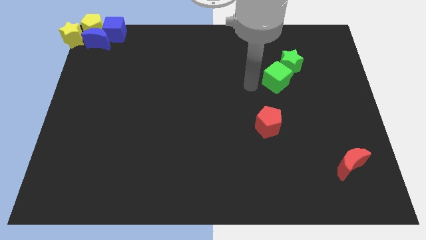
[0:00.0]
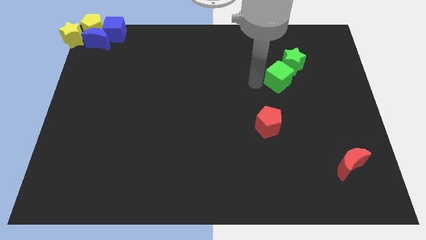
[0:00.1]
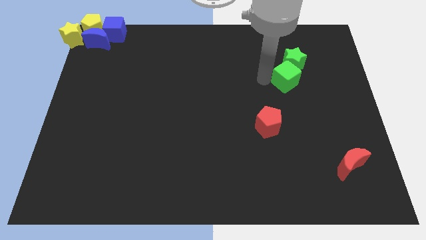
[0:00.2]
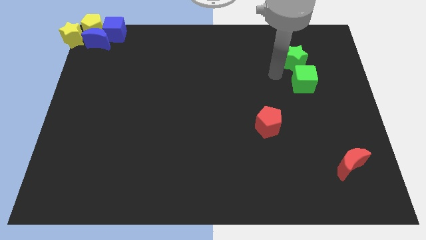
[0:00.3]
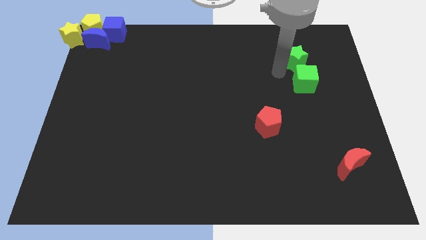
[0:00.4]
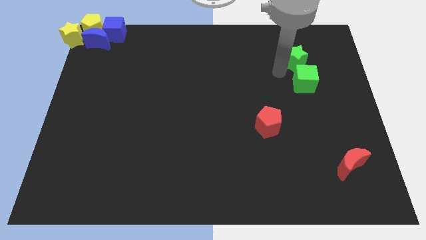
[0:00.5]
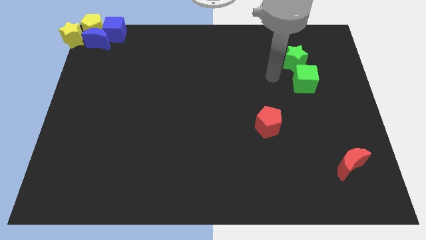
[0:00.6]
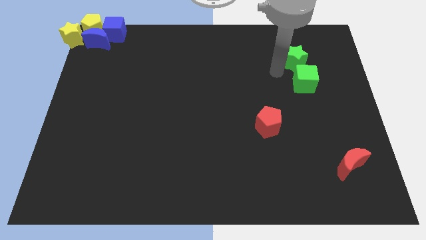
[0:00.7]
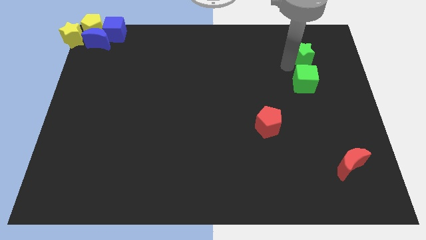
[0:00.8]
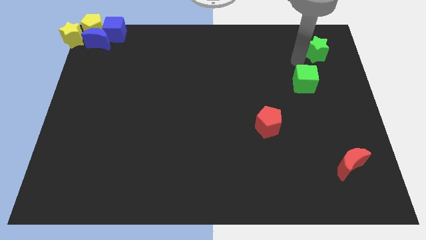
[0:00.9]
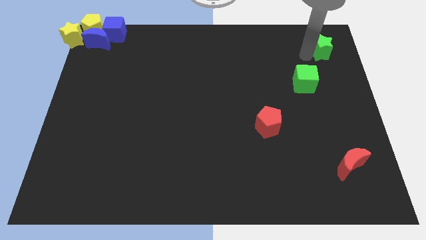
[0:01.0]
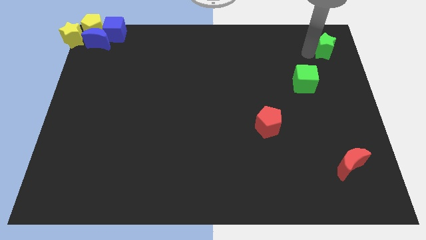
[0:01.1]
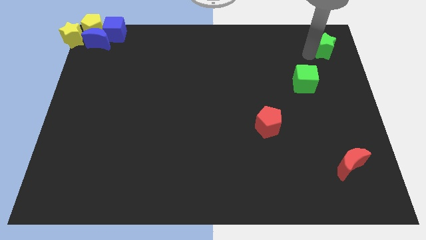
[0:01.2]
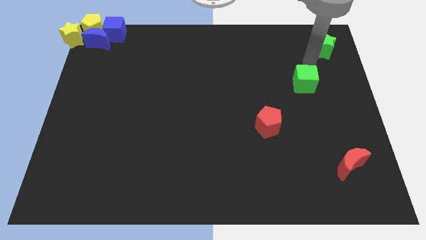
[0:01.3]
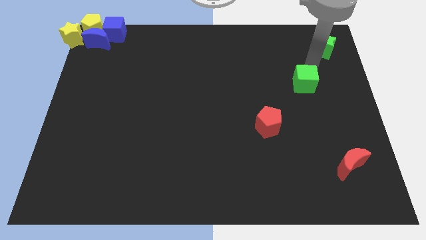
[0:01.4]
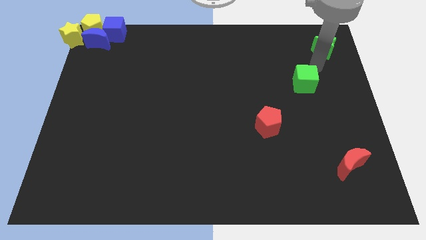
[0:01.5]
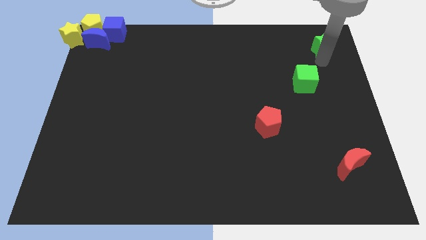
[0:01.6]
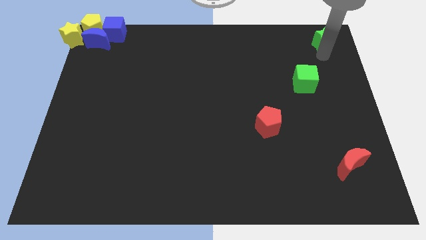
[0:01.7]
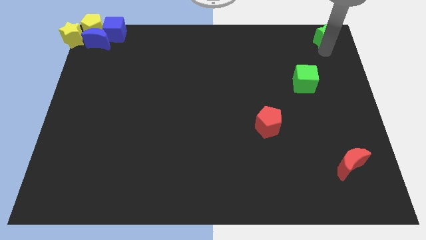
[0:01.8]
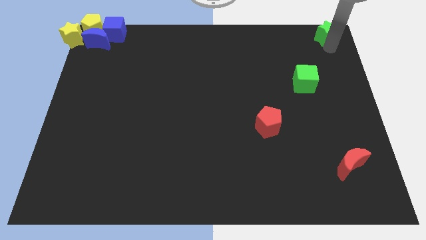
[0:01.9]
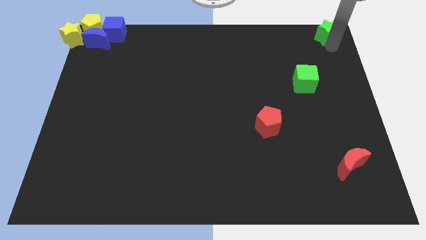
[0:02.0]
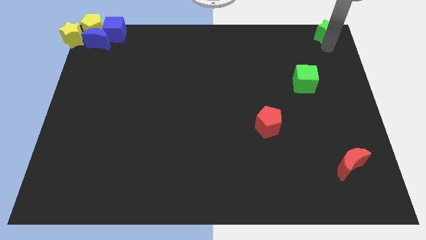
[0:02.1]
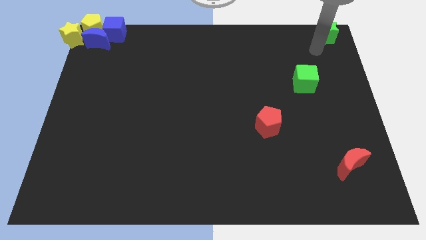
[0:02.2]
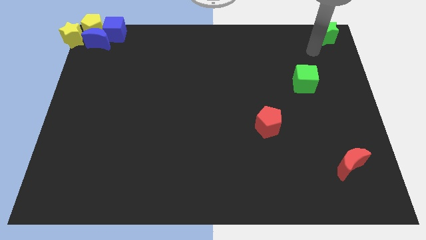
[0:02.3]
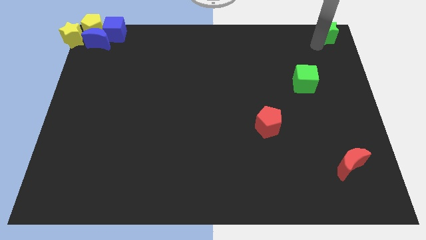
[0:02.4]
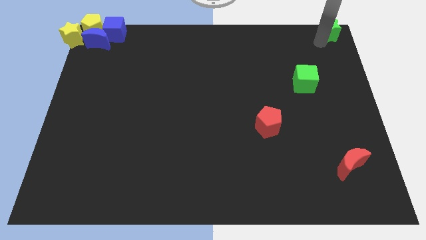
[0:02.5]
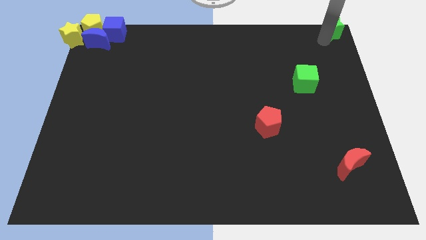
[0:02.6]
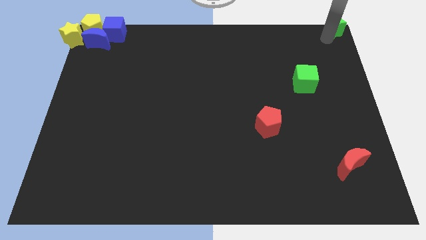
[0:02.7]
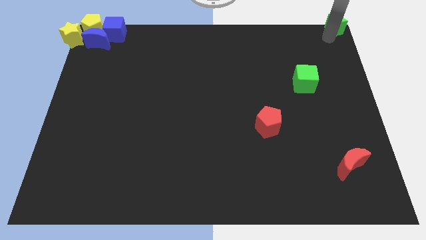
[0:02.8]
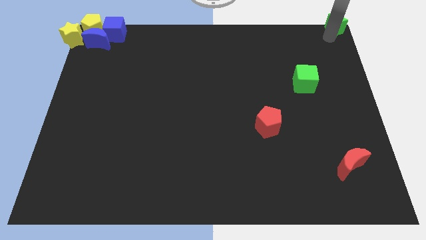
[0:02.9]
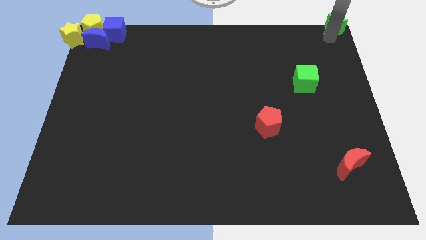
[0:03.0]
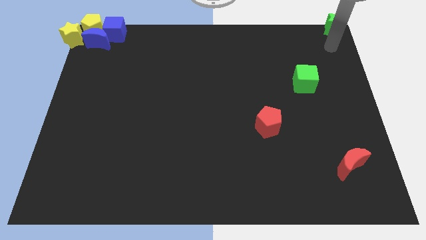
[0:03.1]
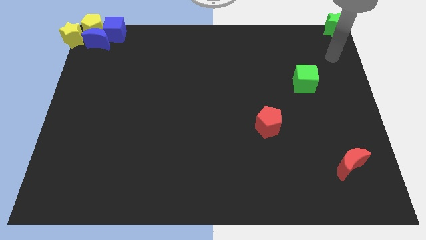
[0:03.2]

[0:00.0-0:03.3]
push the green star to the right top of the board

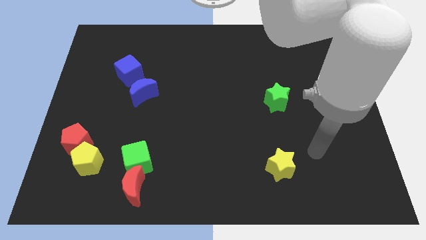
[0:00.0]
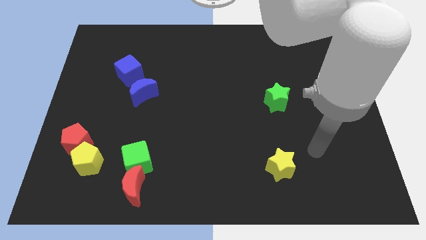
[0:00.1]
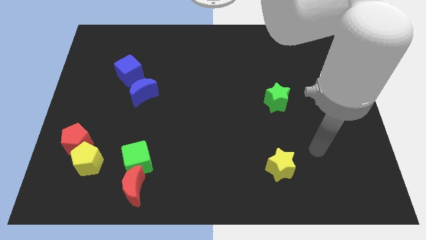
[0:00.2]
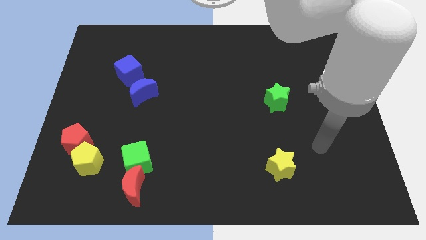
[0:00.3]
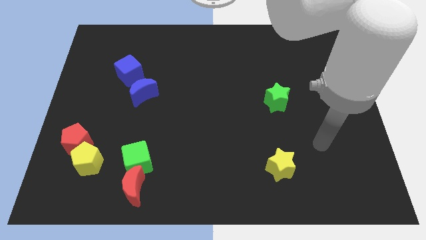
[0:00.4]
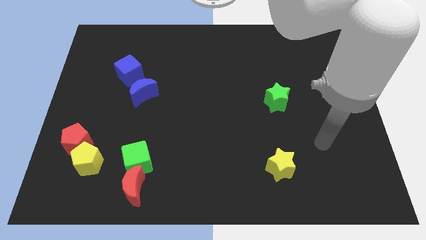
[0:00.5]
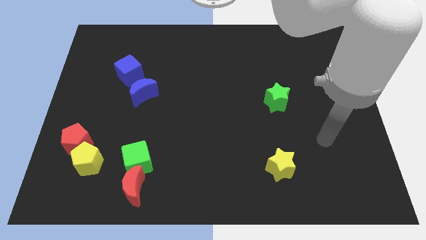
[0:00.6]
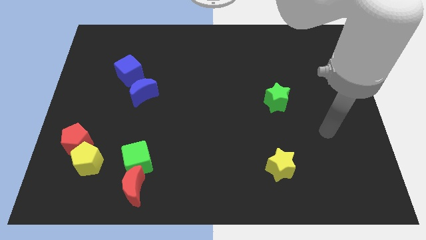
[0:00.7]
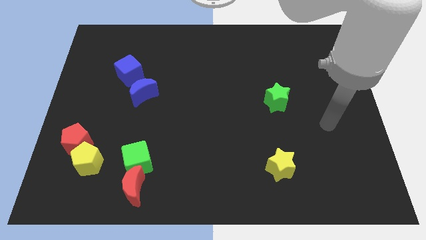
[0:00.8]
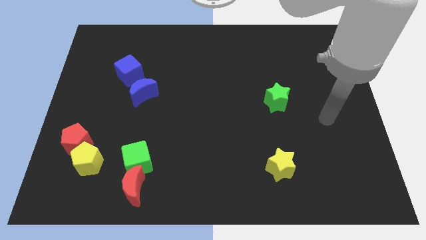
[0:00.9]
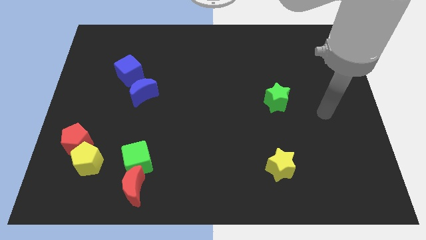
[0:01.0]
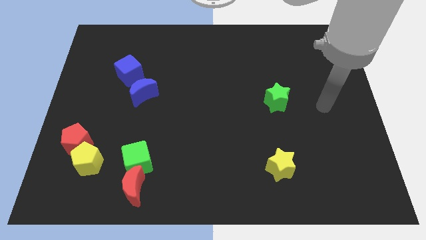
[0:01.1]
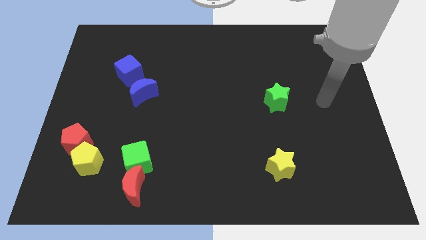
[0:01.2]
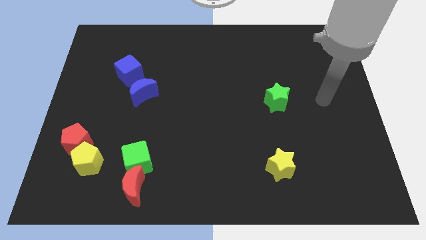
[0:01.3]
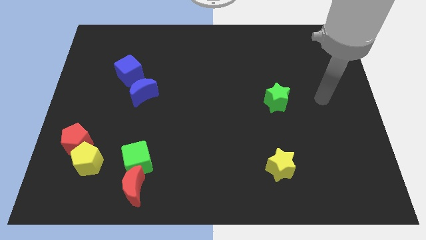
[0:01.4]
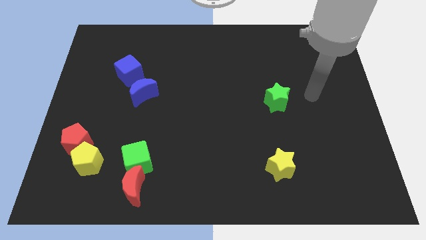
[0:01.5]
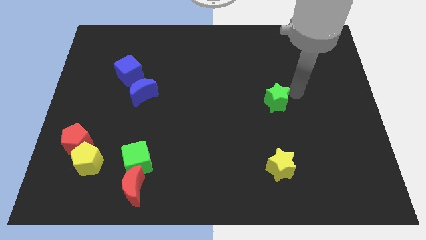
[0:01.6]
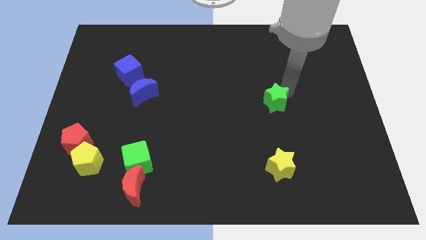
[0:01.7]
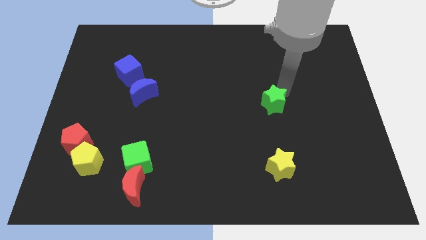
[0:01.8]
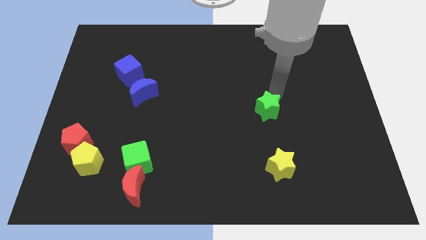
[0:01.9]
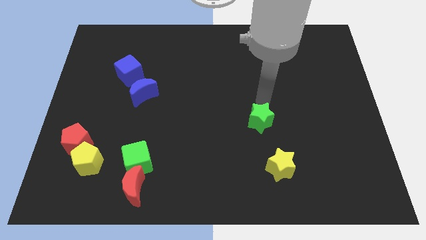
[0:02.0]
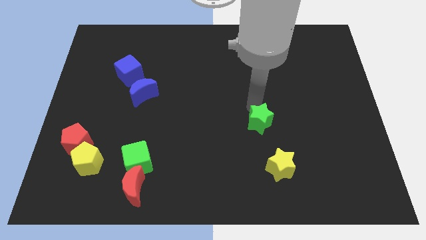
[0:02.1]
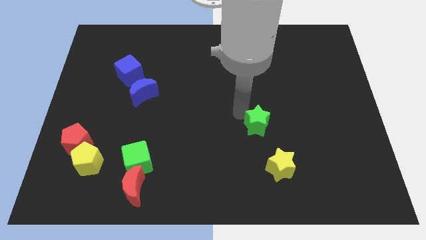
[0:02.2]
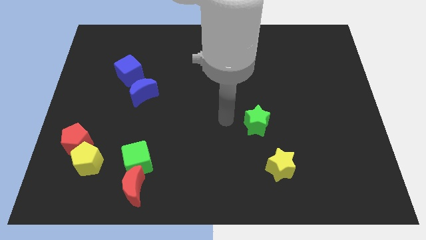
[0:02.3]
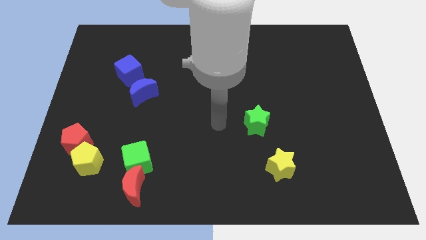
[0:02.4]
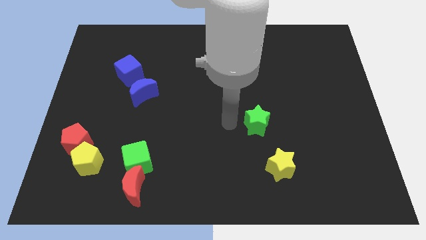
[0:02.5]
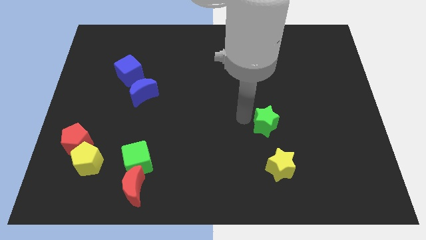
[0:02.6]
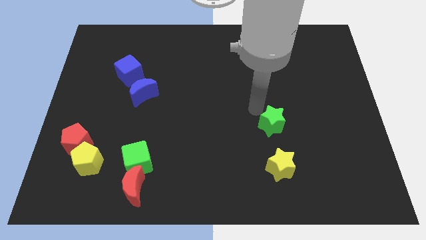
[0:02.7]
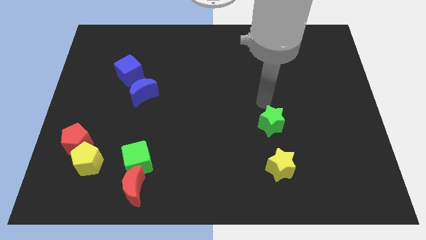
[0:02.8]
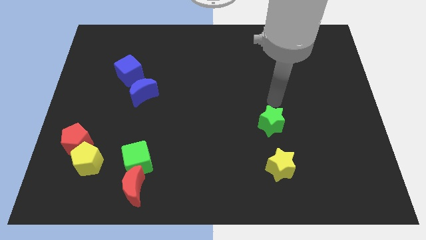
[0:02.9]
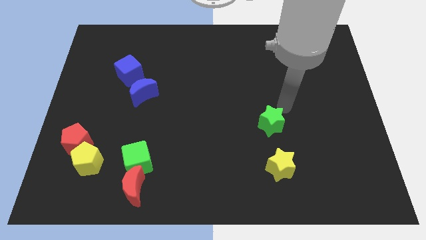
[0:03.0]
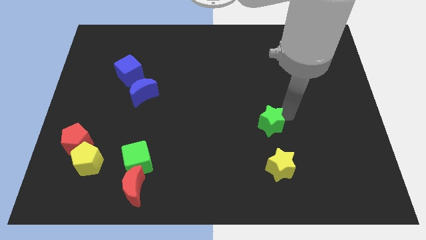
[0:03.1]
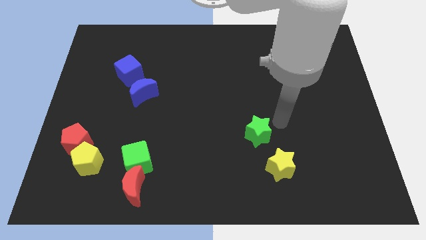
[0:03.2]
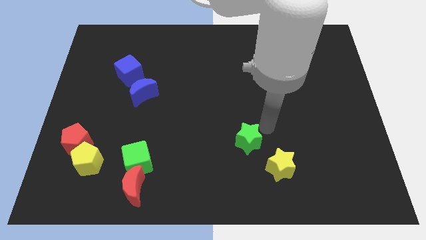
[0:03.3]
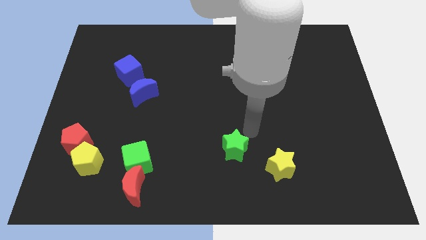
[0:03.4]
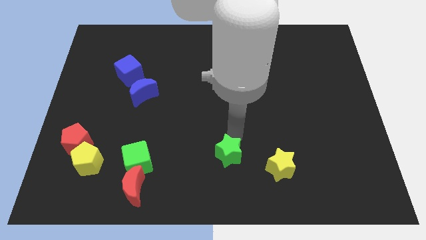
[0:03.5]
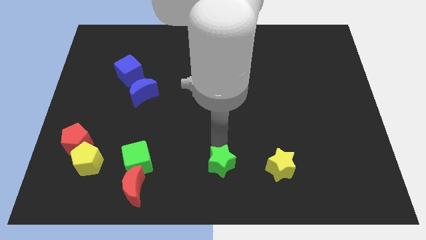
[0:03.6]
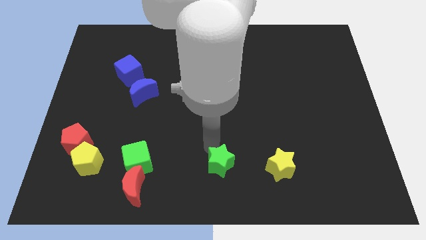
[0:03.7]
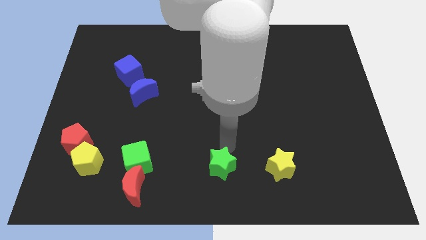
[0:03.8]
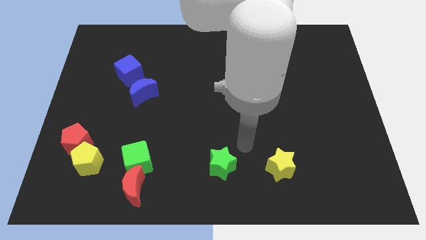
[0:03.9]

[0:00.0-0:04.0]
place the green star in between green cube and yellow star

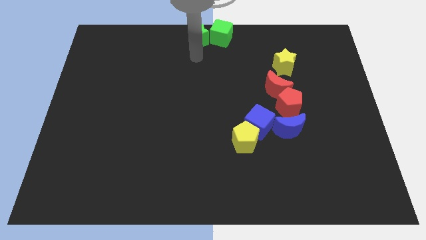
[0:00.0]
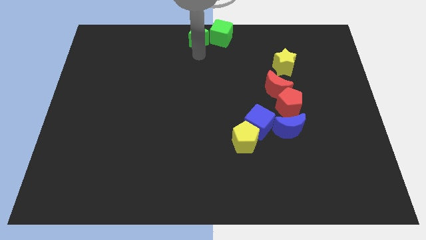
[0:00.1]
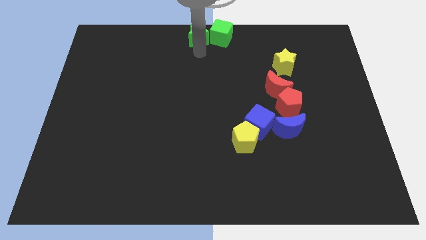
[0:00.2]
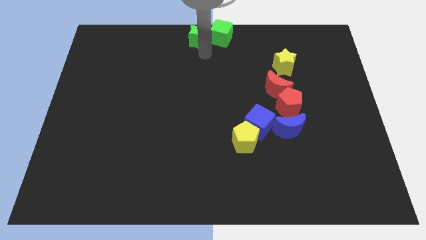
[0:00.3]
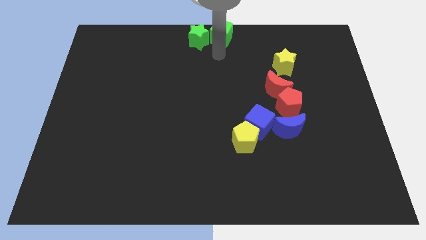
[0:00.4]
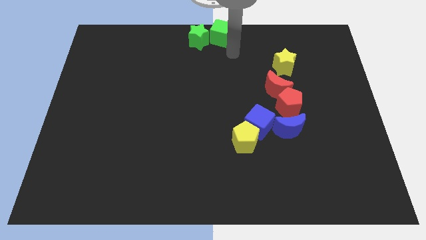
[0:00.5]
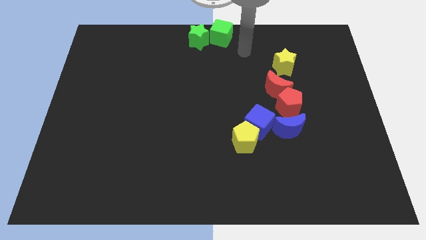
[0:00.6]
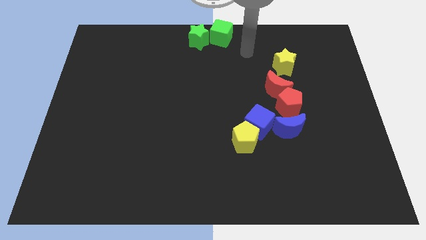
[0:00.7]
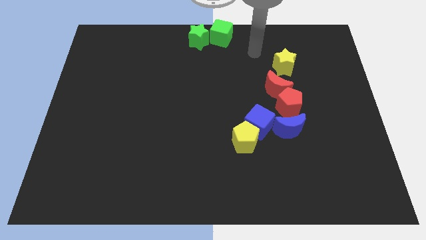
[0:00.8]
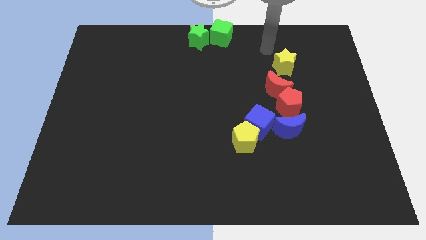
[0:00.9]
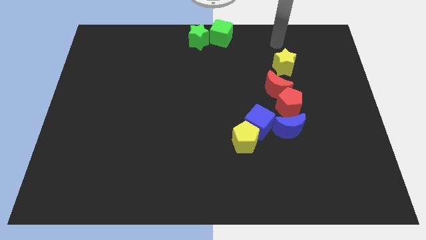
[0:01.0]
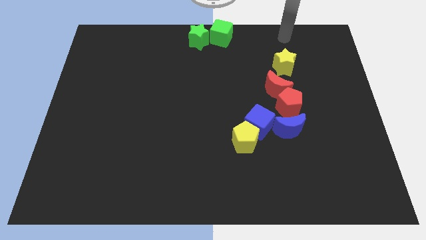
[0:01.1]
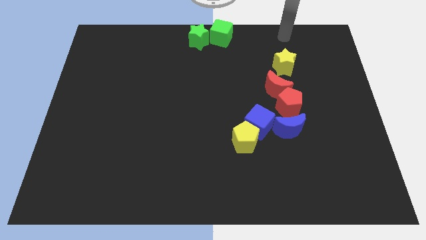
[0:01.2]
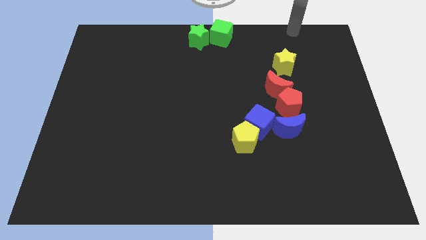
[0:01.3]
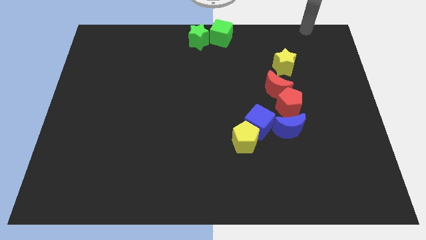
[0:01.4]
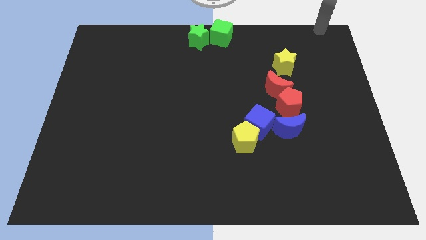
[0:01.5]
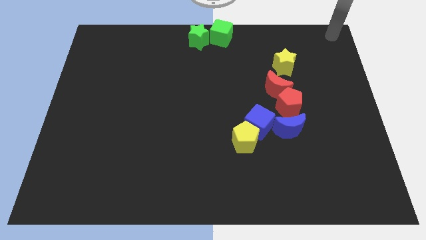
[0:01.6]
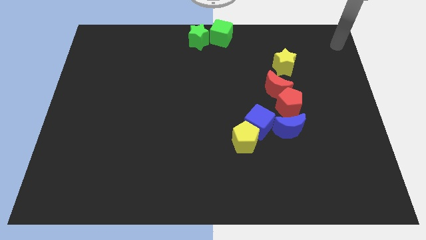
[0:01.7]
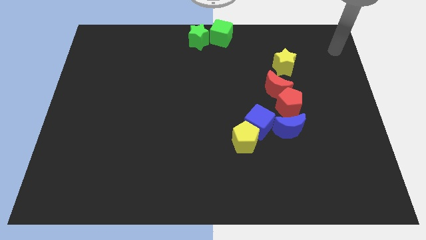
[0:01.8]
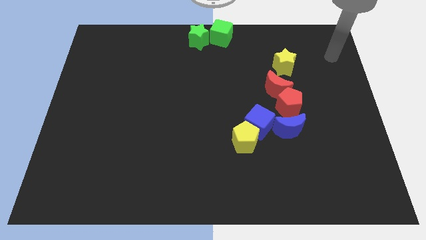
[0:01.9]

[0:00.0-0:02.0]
move the arm away from the green star
